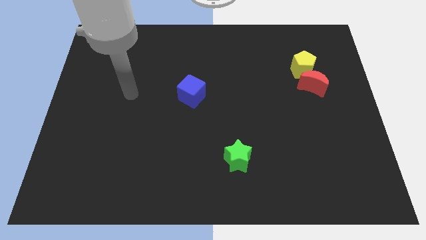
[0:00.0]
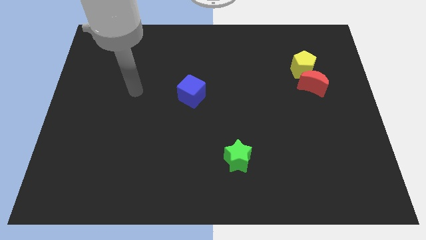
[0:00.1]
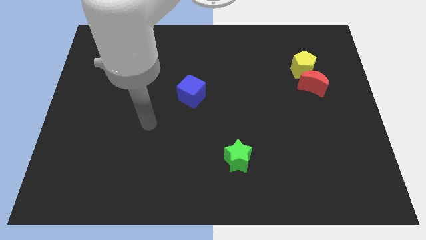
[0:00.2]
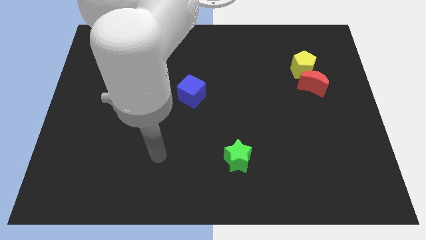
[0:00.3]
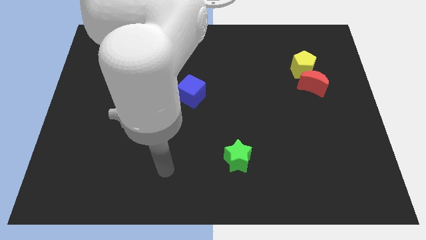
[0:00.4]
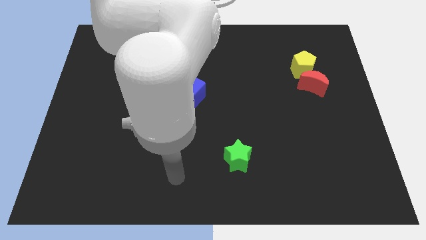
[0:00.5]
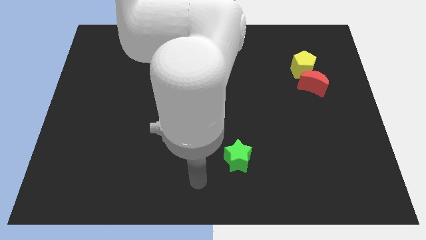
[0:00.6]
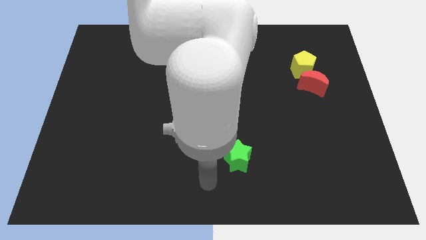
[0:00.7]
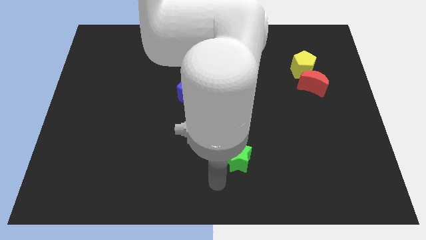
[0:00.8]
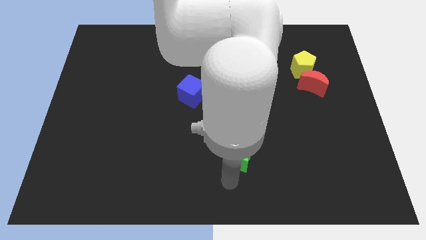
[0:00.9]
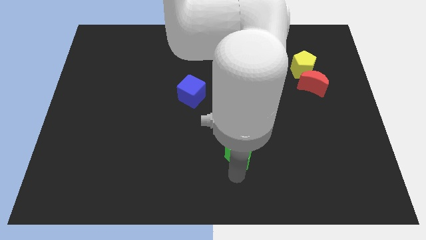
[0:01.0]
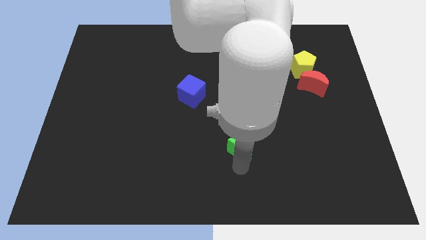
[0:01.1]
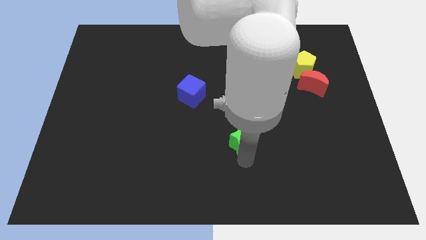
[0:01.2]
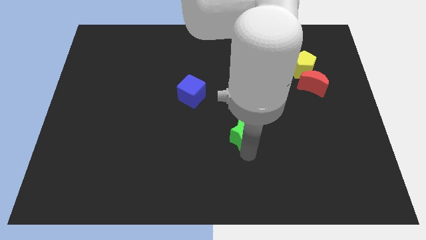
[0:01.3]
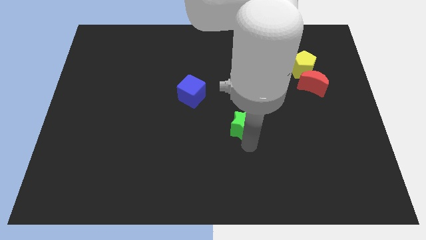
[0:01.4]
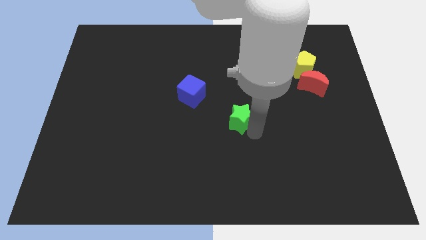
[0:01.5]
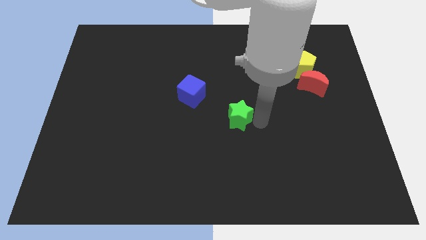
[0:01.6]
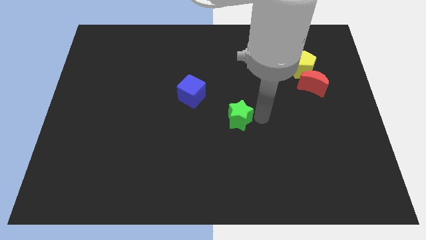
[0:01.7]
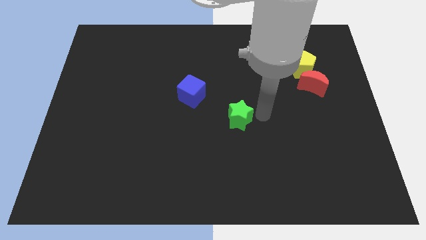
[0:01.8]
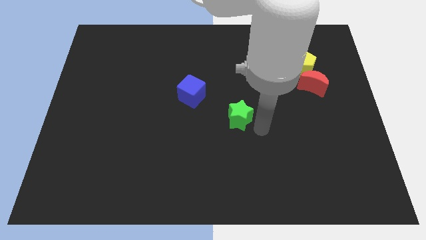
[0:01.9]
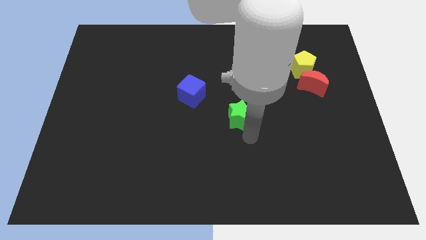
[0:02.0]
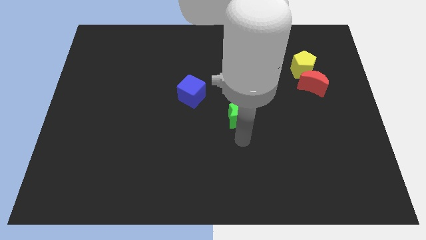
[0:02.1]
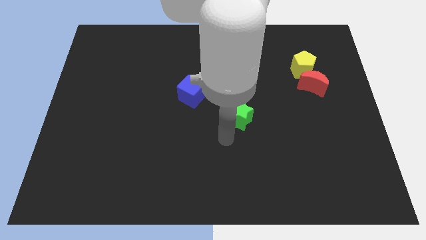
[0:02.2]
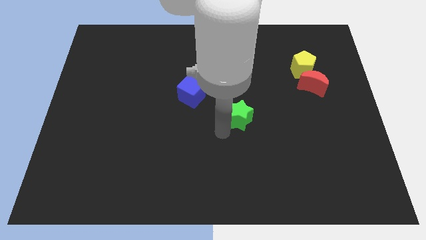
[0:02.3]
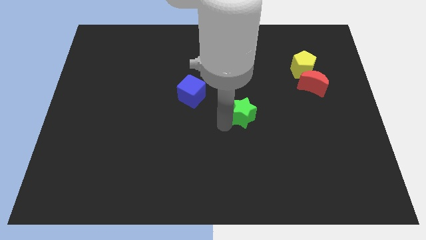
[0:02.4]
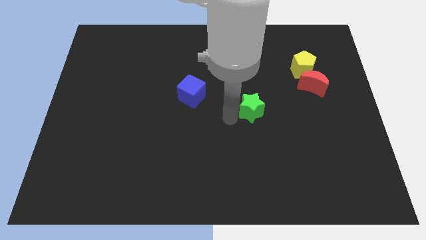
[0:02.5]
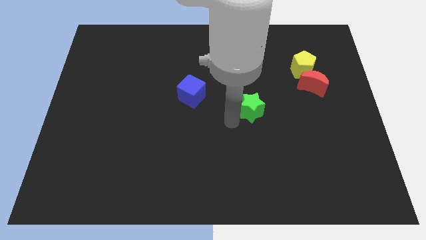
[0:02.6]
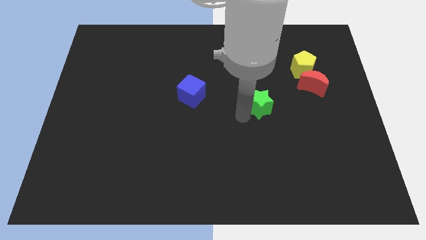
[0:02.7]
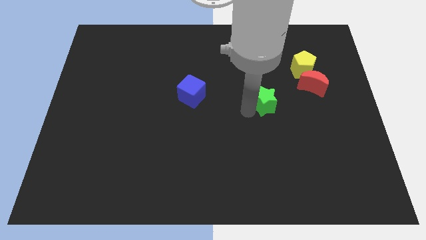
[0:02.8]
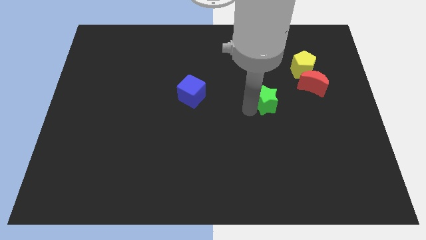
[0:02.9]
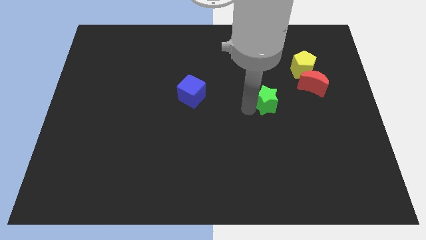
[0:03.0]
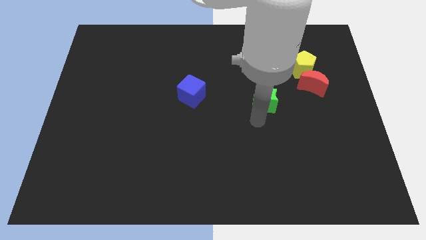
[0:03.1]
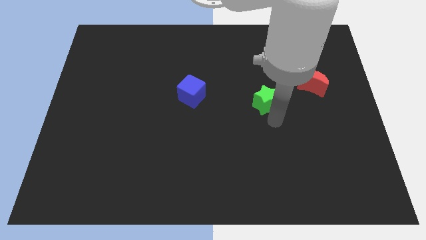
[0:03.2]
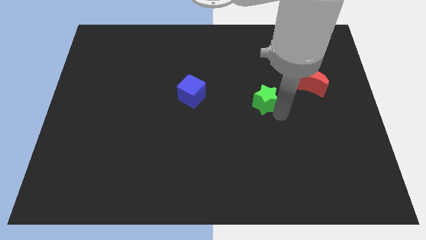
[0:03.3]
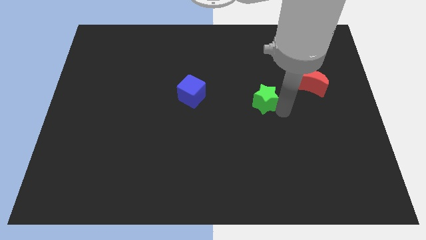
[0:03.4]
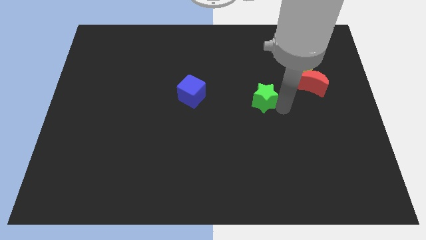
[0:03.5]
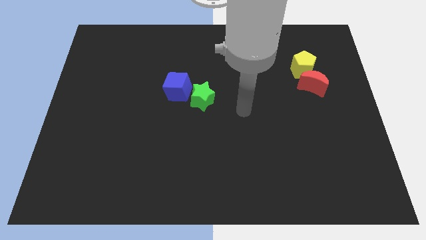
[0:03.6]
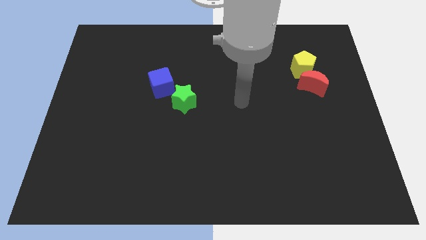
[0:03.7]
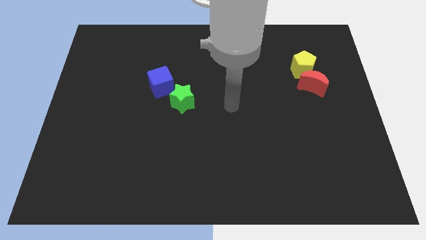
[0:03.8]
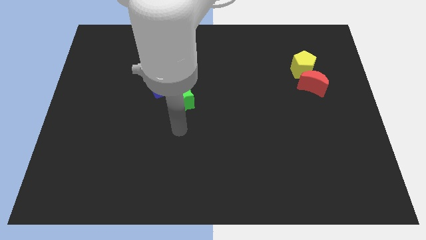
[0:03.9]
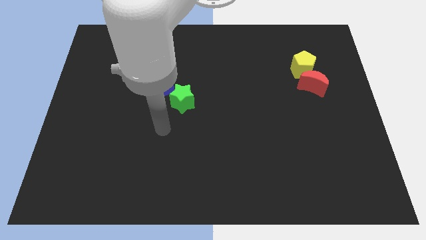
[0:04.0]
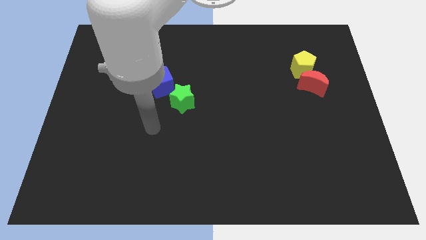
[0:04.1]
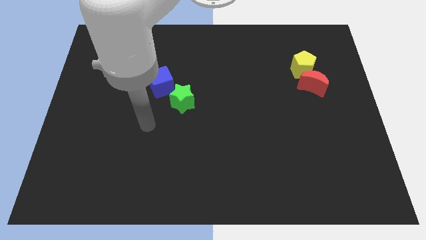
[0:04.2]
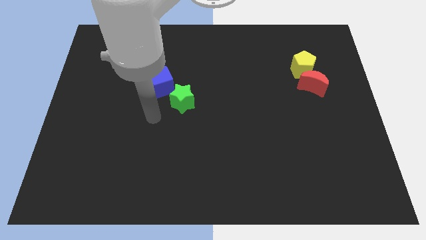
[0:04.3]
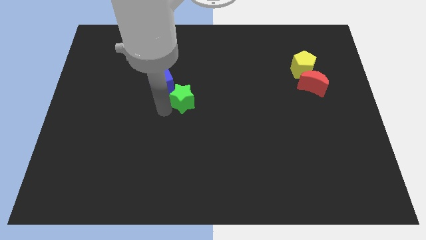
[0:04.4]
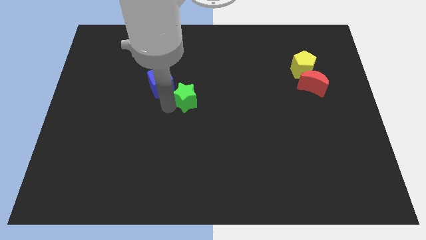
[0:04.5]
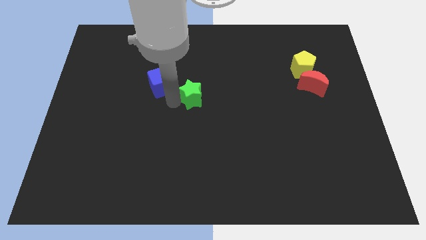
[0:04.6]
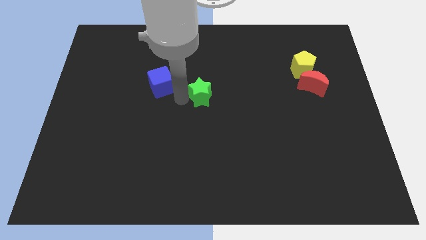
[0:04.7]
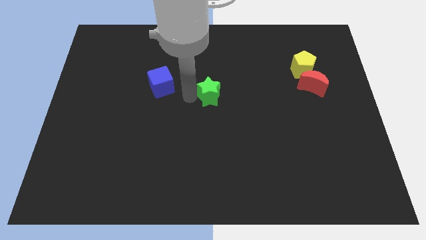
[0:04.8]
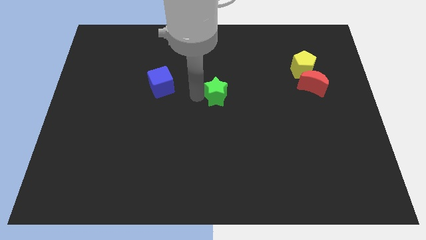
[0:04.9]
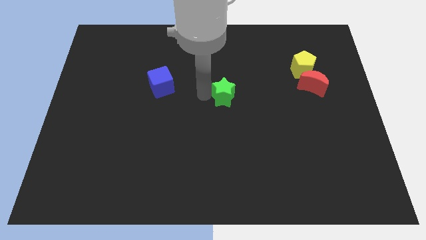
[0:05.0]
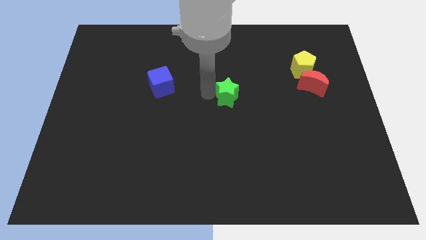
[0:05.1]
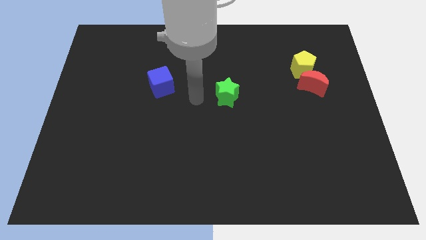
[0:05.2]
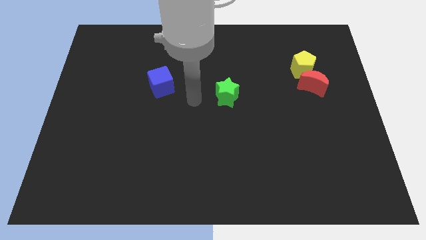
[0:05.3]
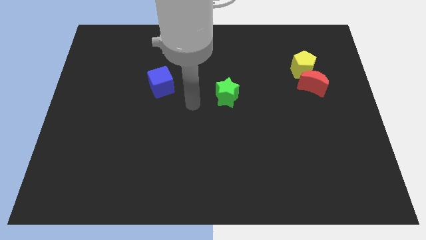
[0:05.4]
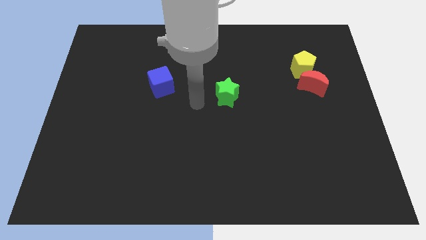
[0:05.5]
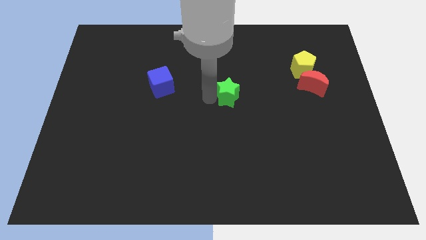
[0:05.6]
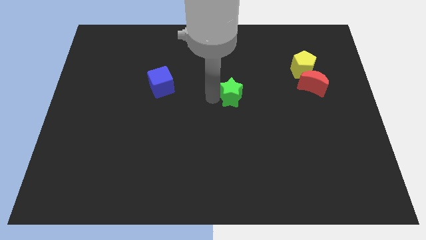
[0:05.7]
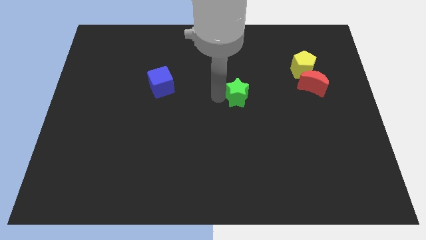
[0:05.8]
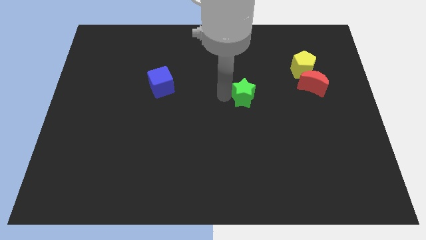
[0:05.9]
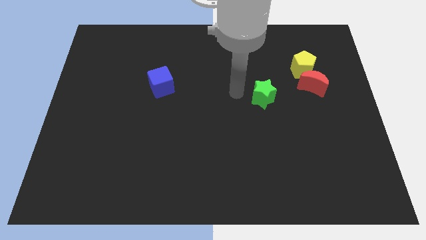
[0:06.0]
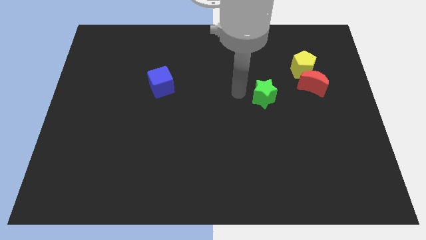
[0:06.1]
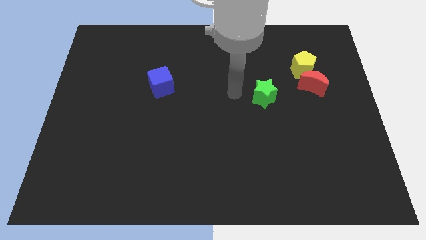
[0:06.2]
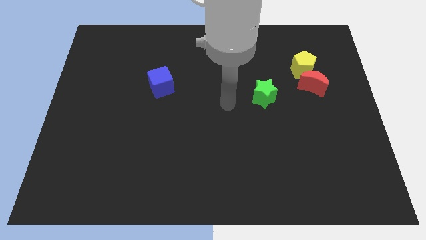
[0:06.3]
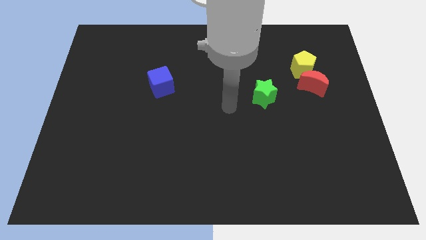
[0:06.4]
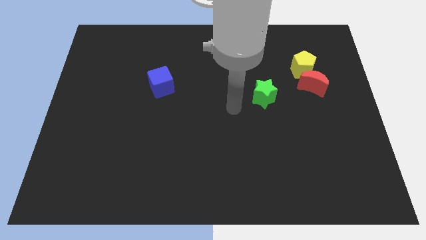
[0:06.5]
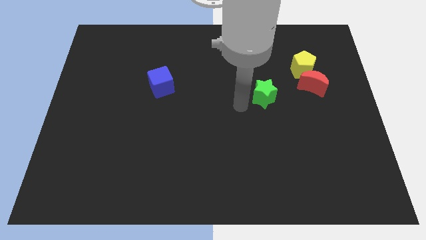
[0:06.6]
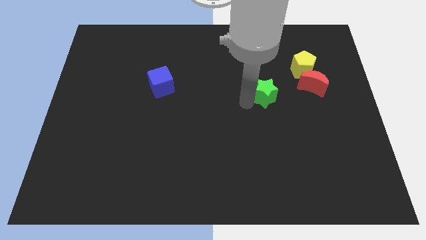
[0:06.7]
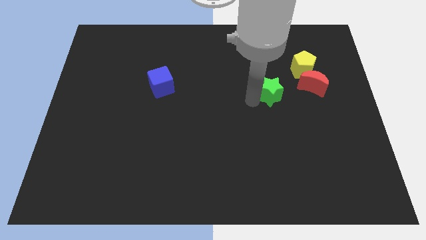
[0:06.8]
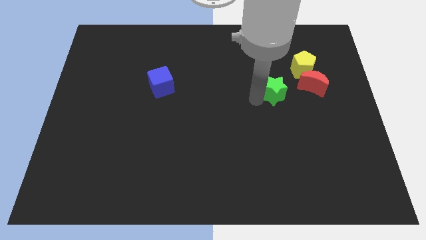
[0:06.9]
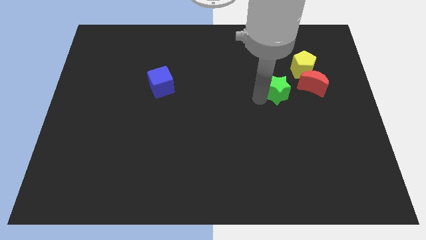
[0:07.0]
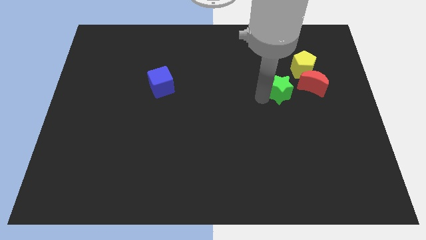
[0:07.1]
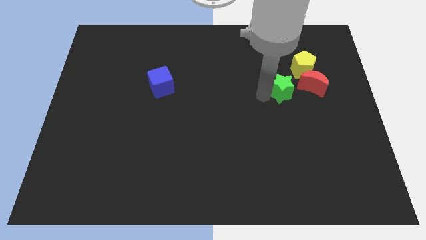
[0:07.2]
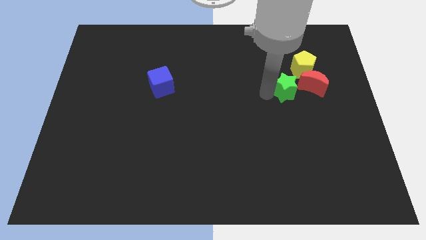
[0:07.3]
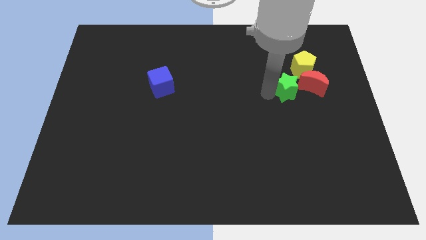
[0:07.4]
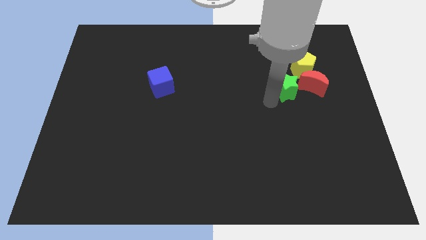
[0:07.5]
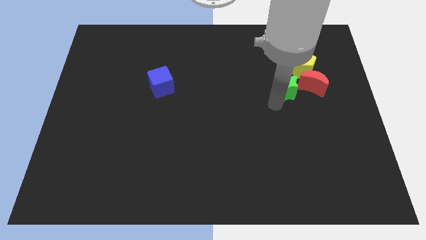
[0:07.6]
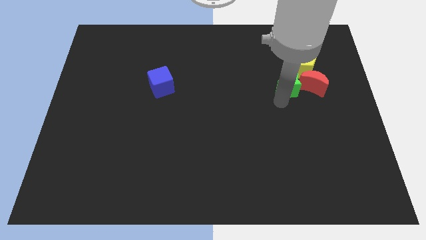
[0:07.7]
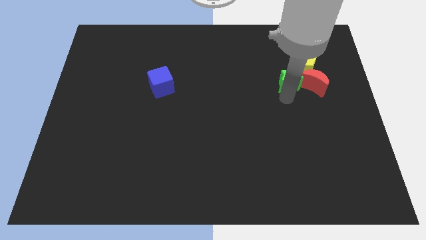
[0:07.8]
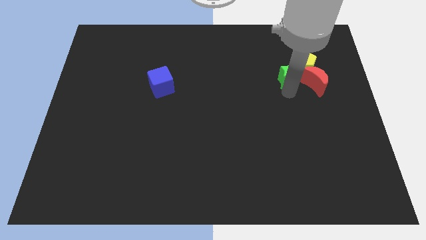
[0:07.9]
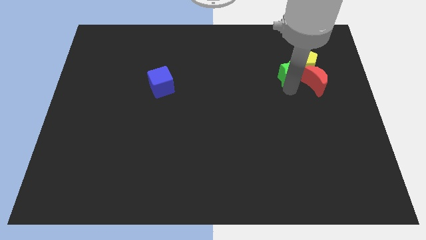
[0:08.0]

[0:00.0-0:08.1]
put the star close to the yellow pentagon

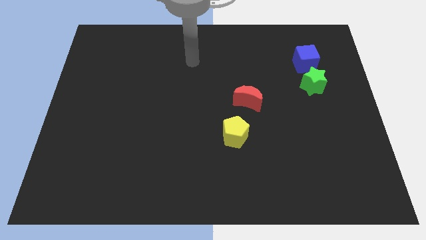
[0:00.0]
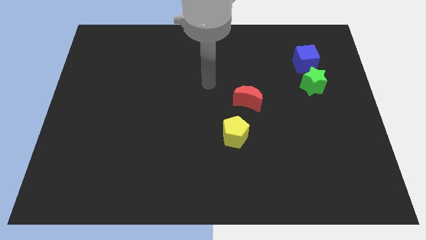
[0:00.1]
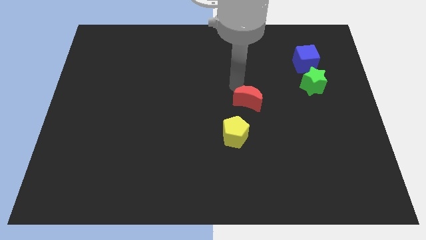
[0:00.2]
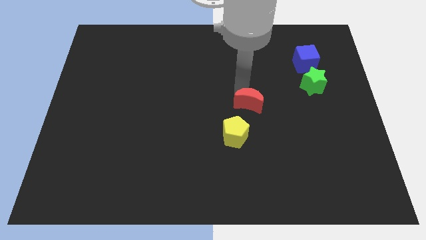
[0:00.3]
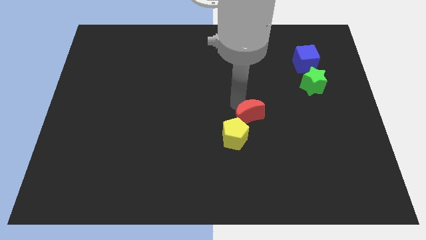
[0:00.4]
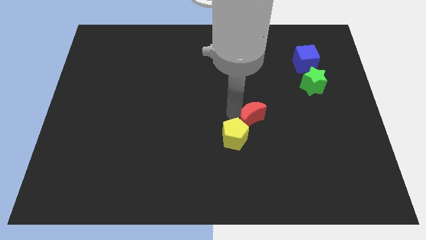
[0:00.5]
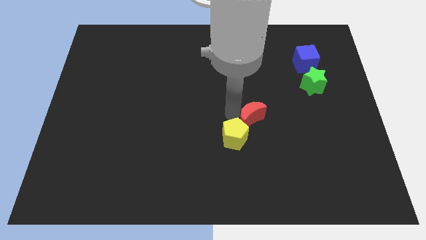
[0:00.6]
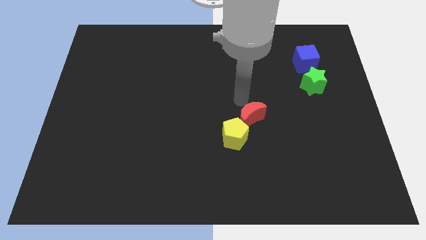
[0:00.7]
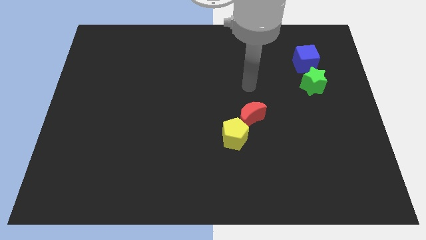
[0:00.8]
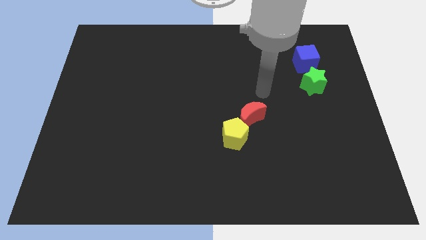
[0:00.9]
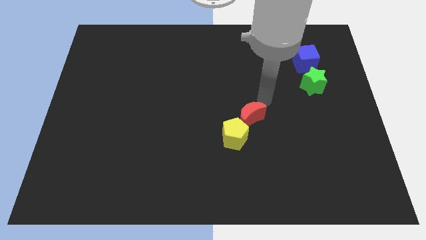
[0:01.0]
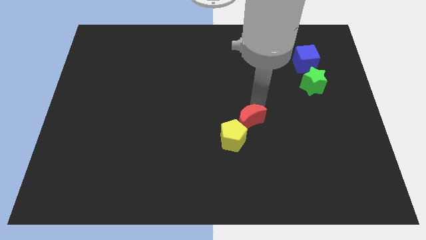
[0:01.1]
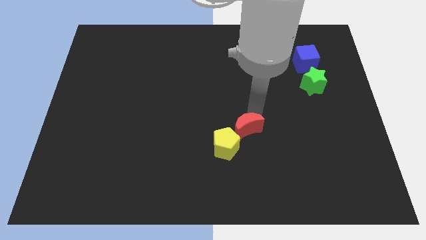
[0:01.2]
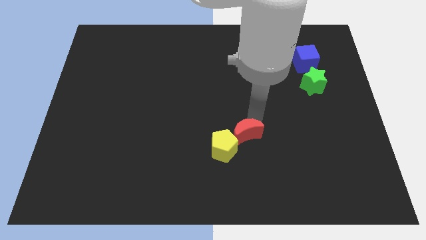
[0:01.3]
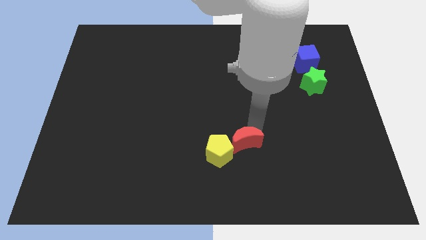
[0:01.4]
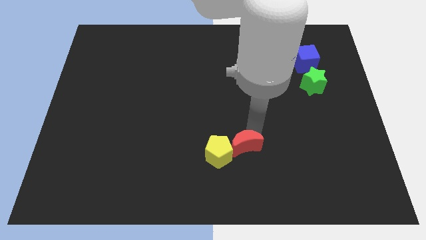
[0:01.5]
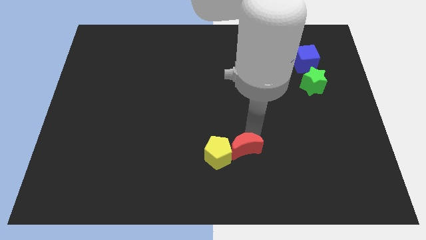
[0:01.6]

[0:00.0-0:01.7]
put the red block close to the pentagon
